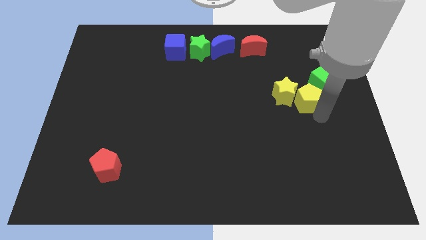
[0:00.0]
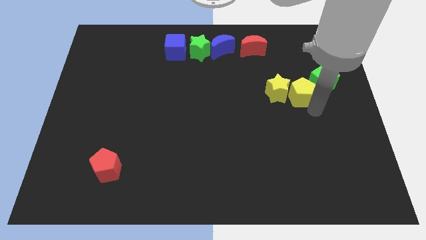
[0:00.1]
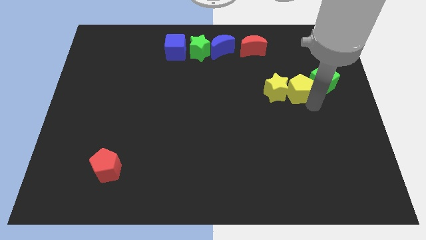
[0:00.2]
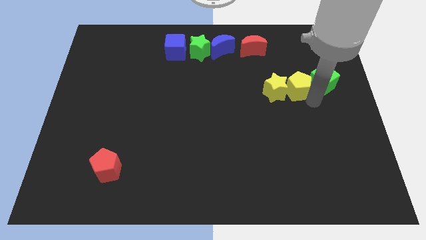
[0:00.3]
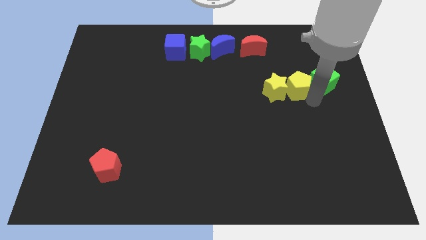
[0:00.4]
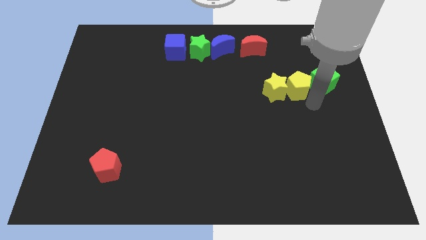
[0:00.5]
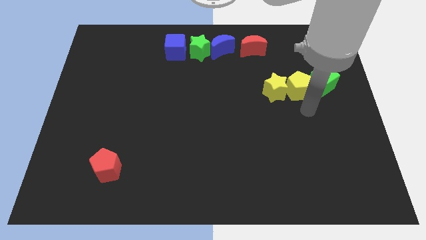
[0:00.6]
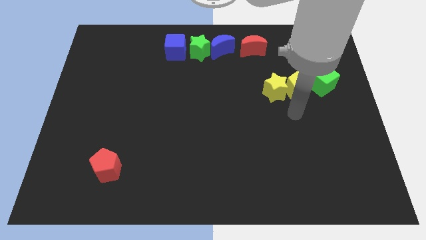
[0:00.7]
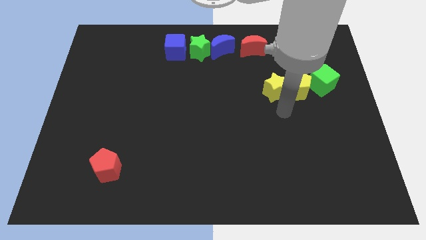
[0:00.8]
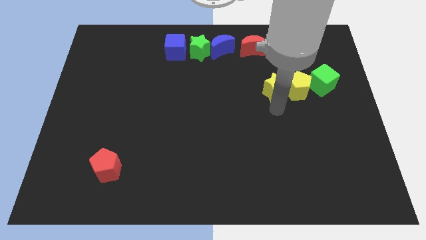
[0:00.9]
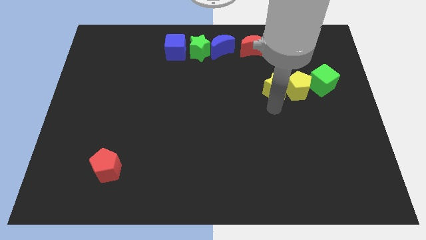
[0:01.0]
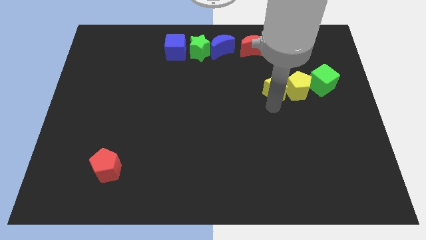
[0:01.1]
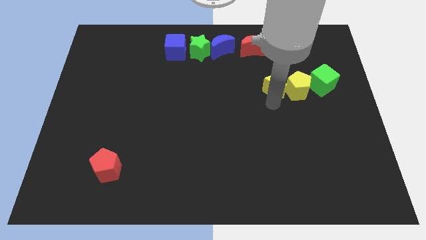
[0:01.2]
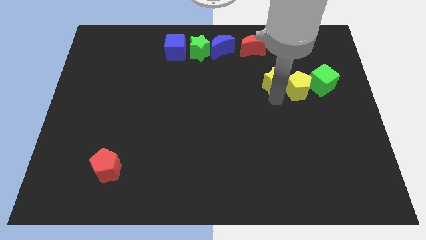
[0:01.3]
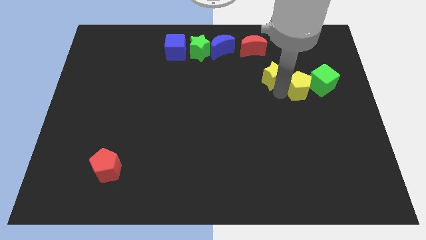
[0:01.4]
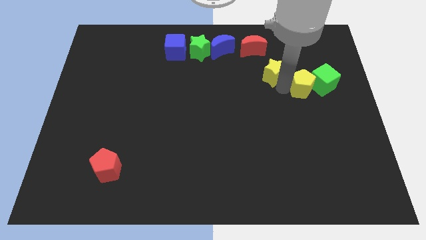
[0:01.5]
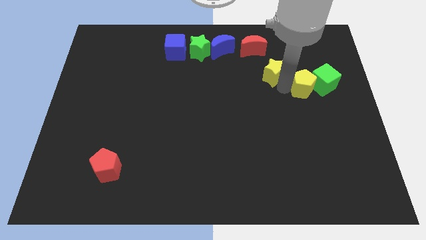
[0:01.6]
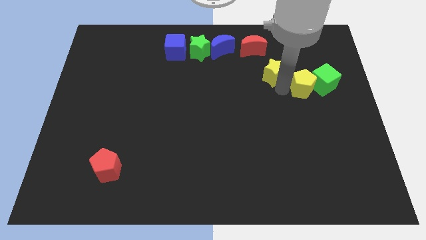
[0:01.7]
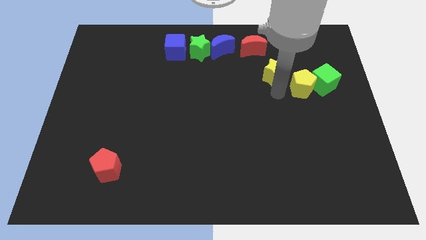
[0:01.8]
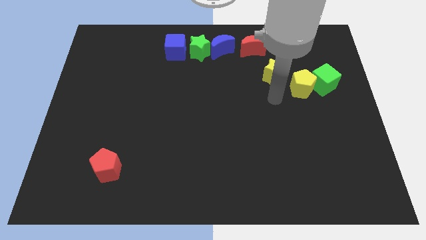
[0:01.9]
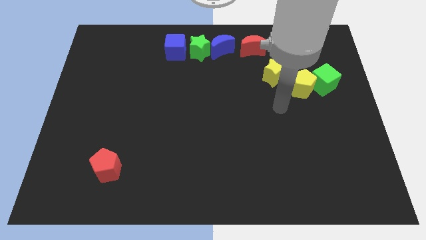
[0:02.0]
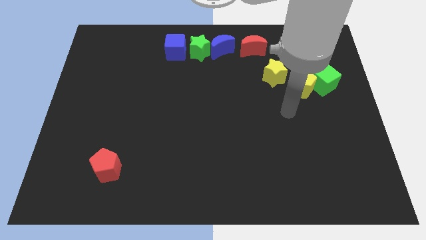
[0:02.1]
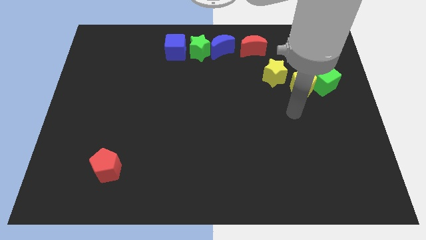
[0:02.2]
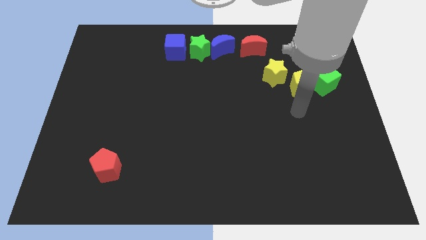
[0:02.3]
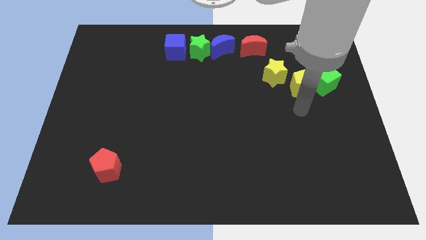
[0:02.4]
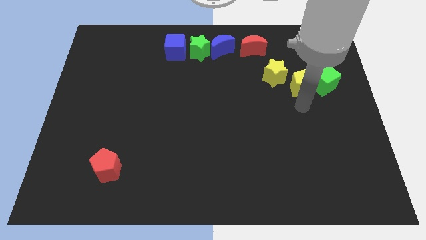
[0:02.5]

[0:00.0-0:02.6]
place a yellow star to the bottom right of the red moon

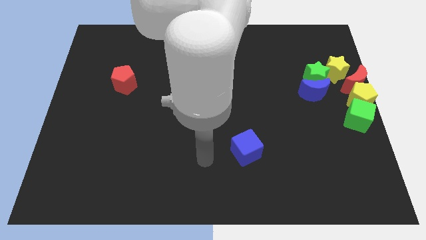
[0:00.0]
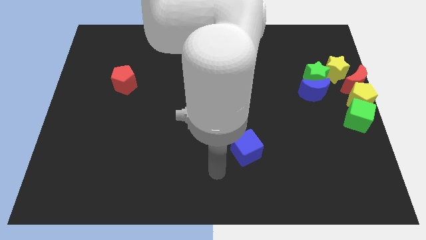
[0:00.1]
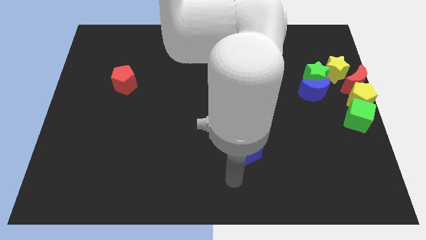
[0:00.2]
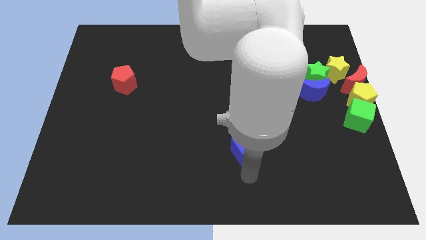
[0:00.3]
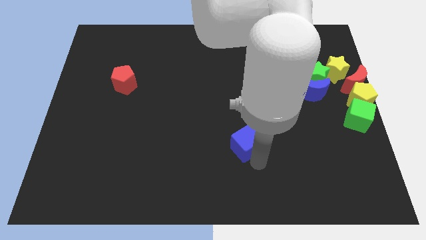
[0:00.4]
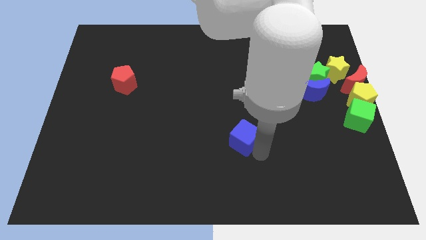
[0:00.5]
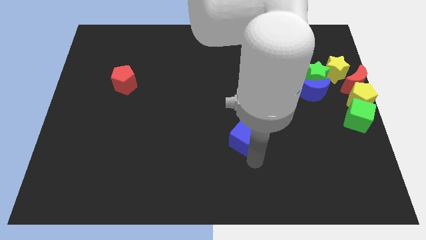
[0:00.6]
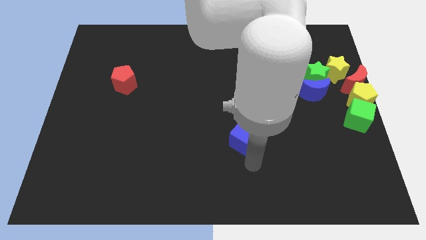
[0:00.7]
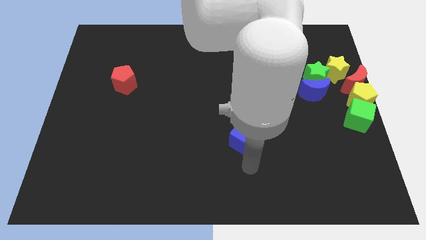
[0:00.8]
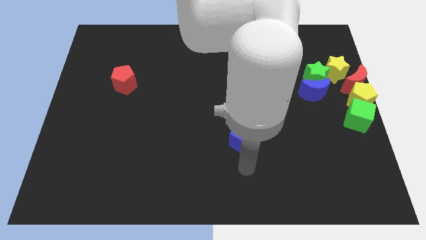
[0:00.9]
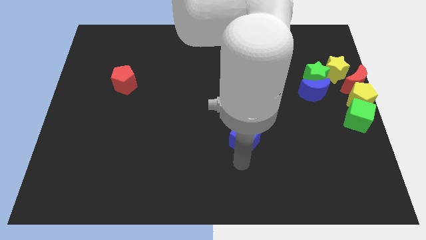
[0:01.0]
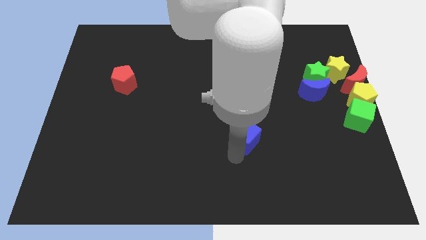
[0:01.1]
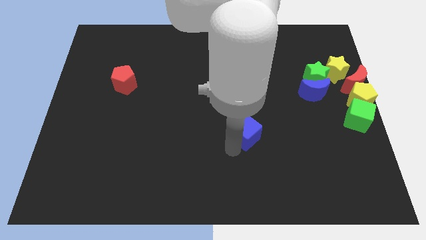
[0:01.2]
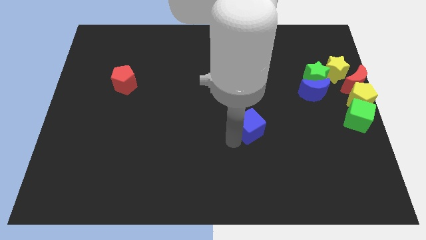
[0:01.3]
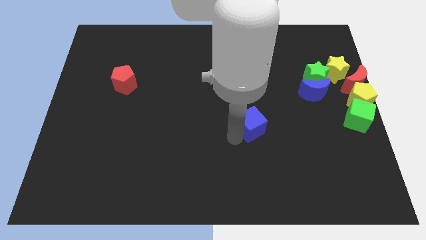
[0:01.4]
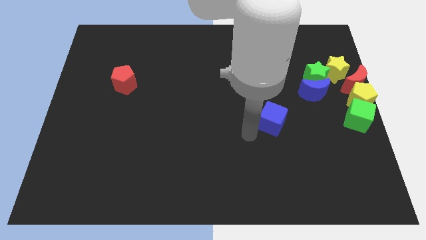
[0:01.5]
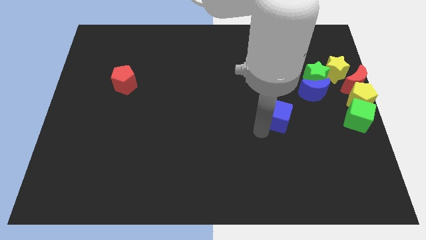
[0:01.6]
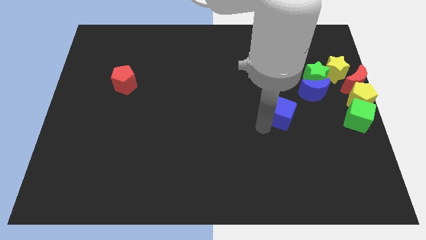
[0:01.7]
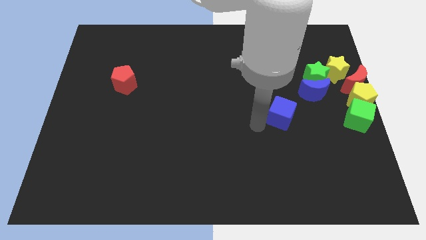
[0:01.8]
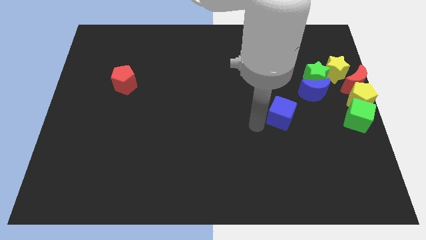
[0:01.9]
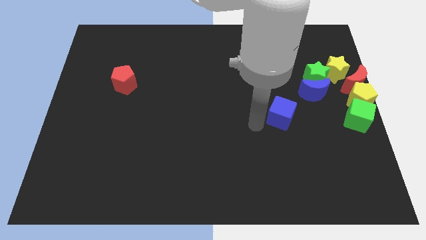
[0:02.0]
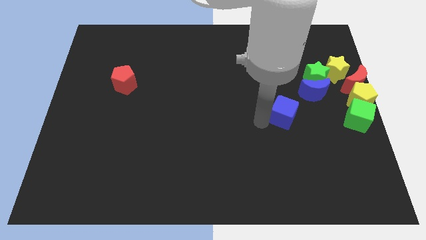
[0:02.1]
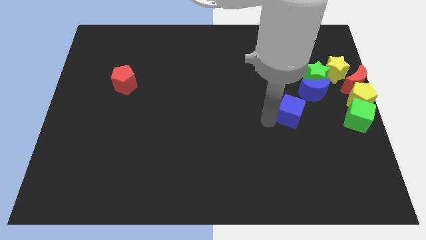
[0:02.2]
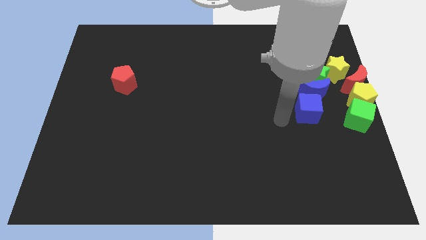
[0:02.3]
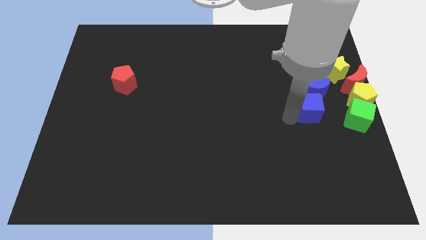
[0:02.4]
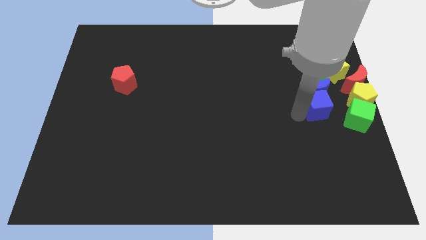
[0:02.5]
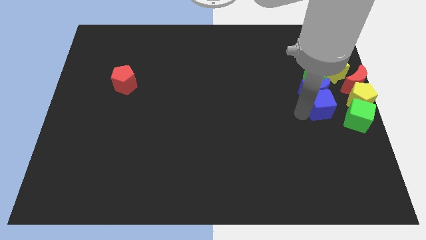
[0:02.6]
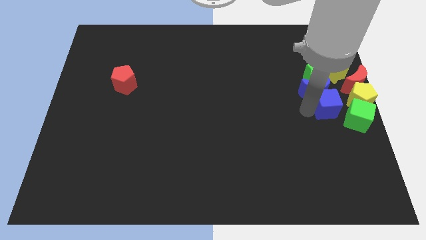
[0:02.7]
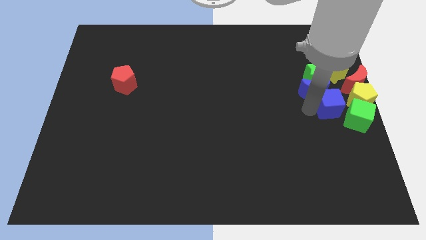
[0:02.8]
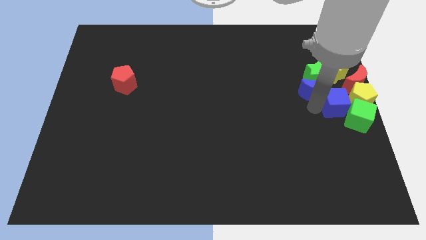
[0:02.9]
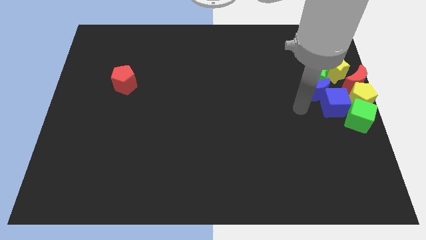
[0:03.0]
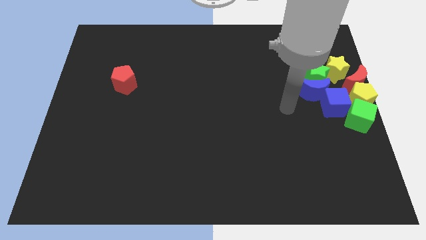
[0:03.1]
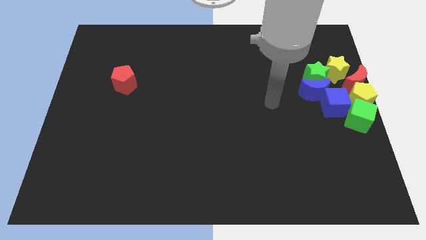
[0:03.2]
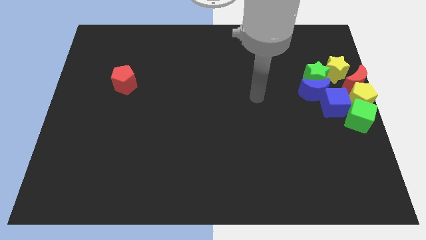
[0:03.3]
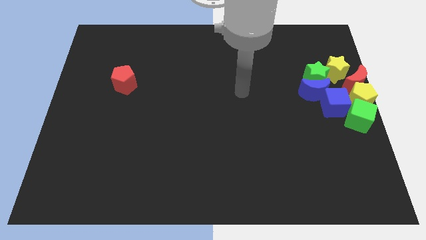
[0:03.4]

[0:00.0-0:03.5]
move blue cube into yellow pentagon

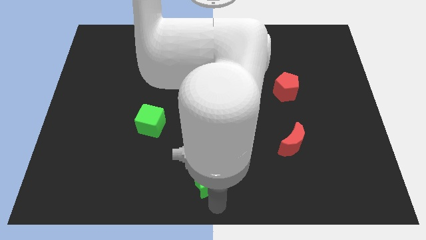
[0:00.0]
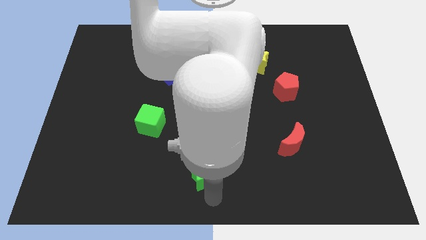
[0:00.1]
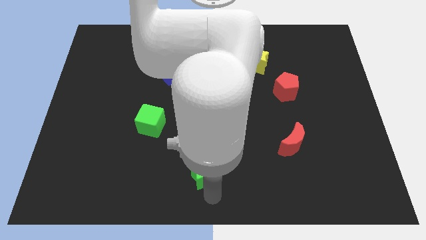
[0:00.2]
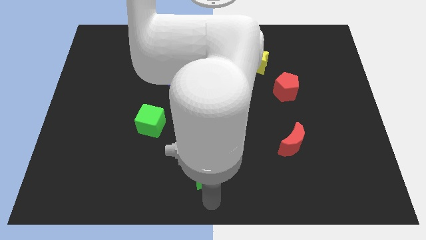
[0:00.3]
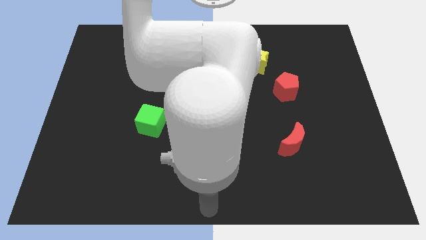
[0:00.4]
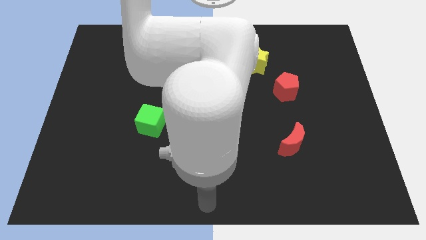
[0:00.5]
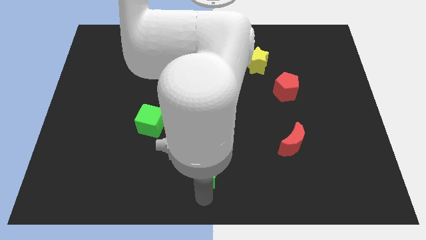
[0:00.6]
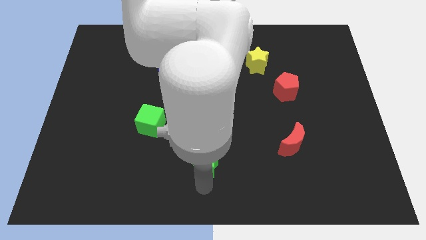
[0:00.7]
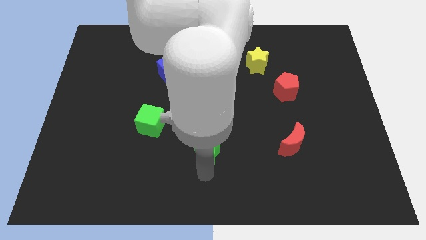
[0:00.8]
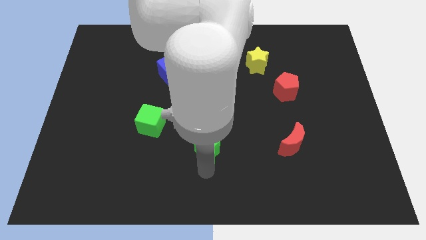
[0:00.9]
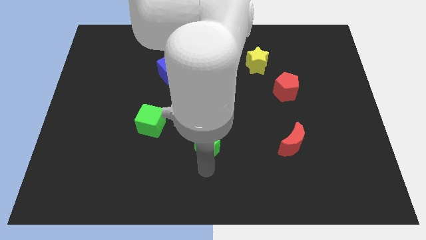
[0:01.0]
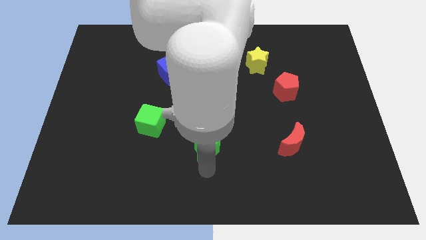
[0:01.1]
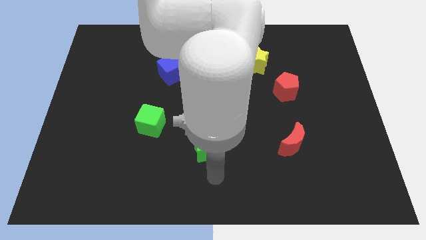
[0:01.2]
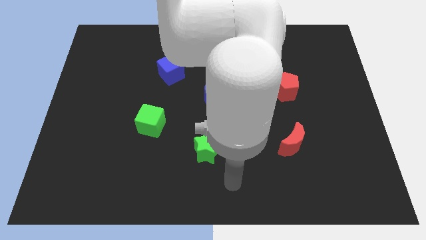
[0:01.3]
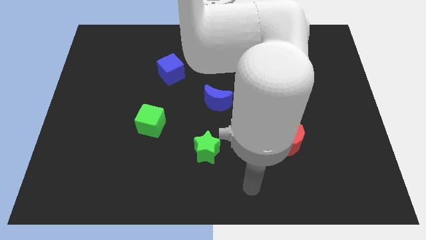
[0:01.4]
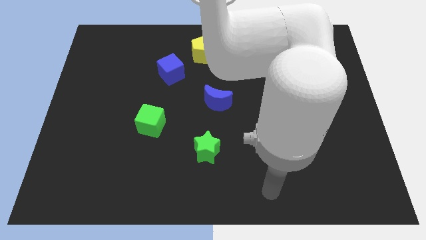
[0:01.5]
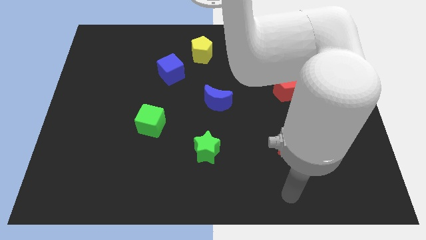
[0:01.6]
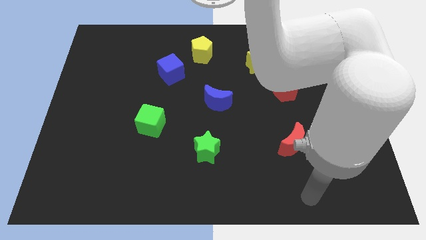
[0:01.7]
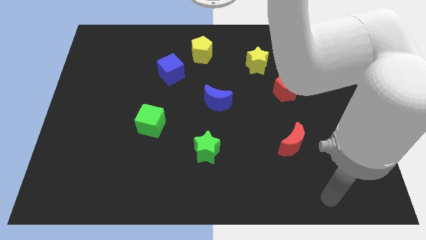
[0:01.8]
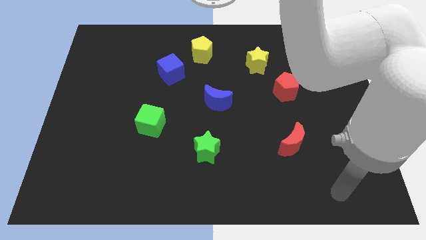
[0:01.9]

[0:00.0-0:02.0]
move the green star to the bottom of the blue crescent

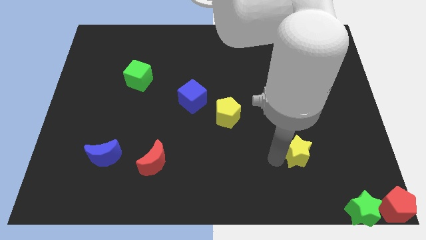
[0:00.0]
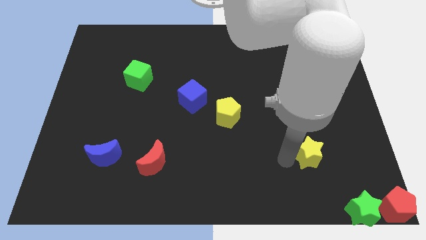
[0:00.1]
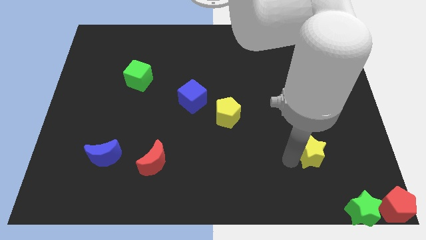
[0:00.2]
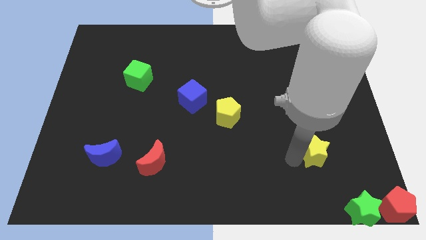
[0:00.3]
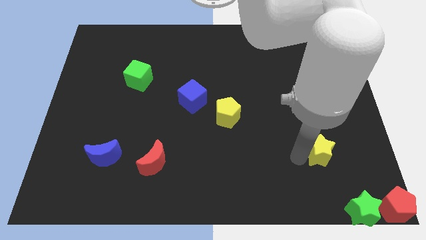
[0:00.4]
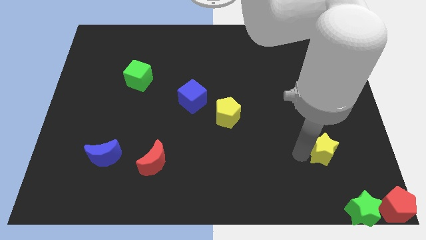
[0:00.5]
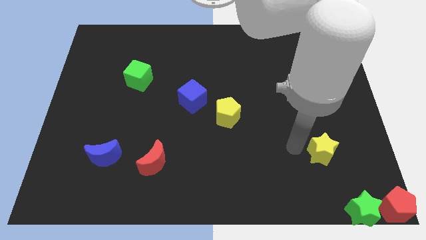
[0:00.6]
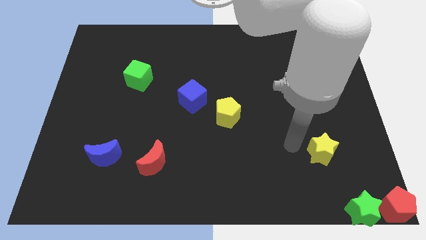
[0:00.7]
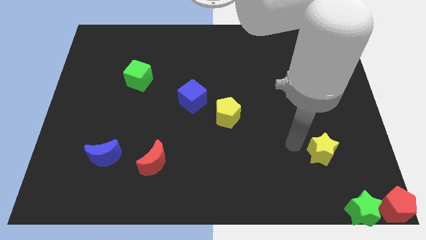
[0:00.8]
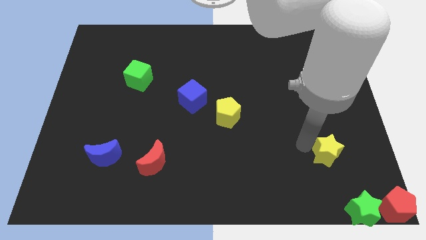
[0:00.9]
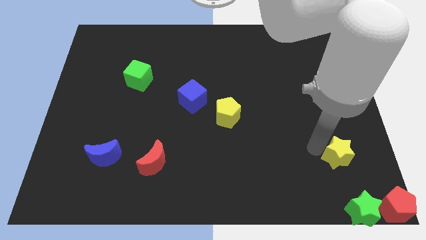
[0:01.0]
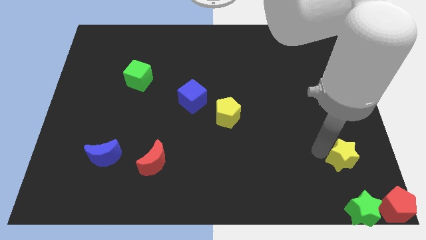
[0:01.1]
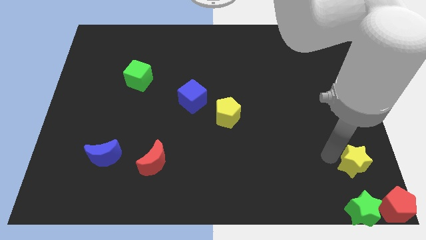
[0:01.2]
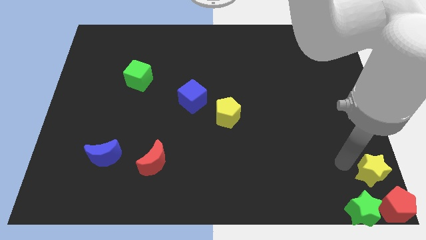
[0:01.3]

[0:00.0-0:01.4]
place the yellow star above the red pentagon and green star at the bottom right corner of the board
